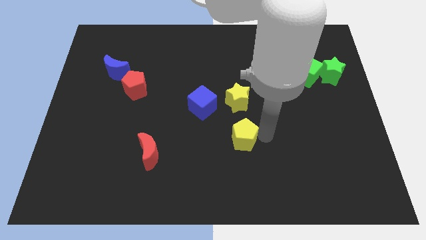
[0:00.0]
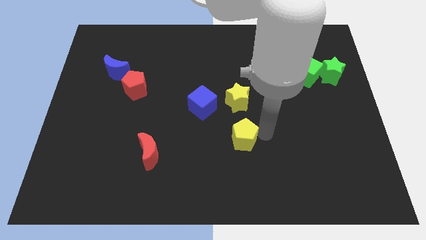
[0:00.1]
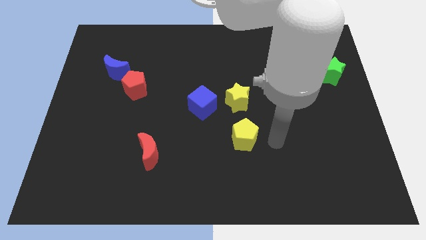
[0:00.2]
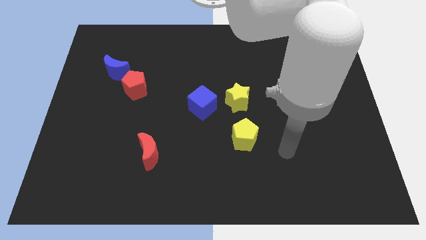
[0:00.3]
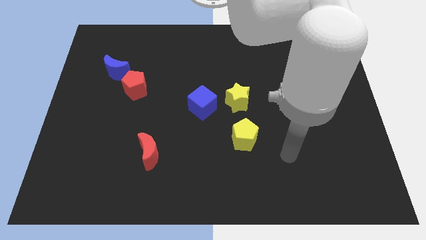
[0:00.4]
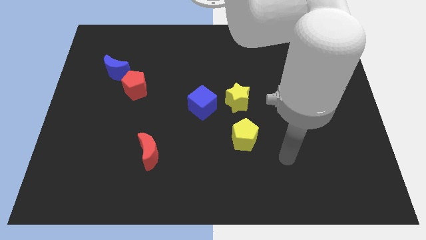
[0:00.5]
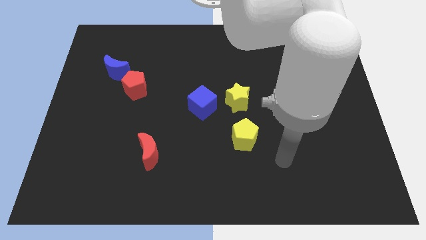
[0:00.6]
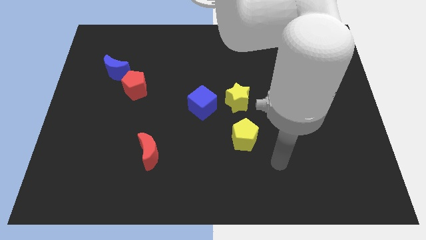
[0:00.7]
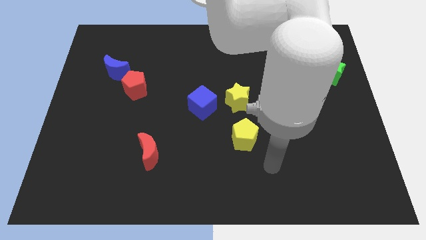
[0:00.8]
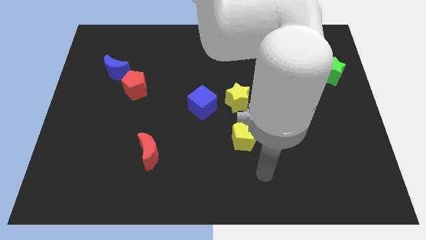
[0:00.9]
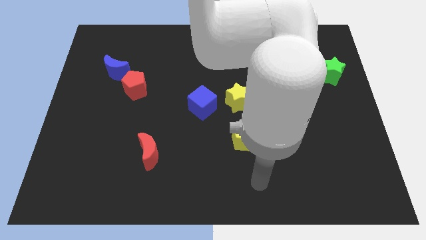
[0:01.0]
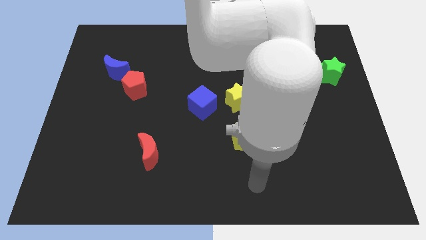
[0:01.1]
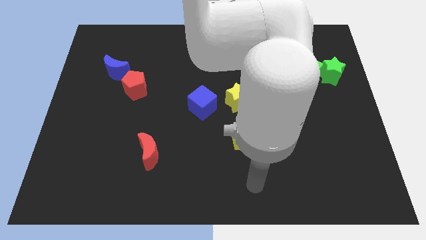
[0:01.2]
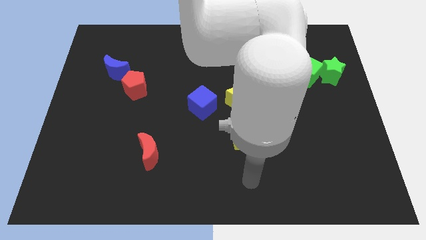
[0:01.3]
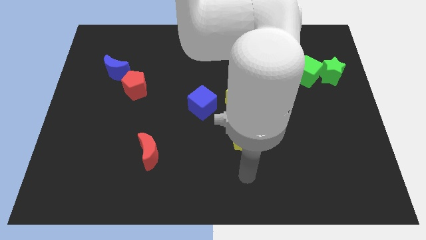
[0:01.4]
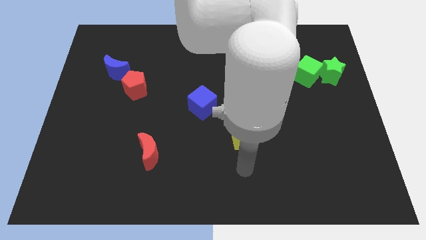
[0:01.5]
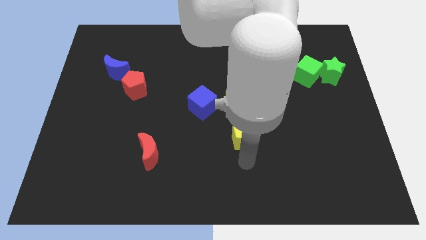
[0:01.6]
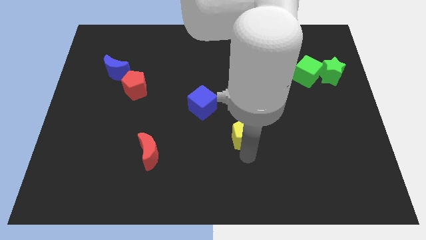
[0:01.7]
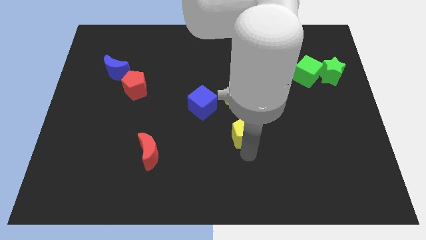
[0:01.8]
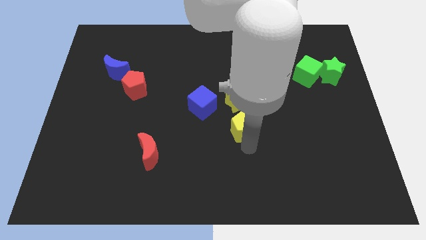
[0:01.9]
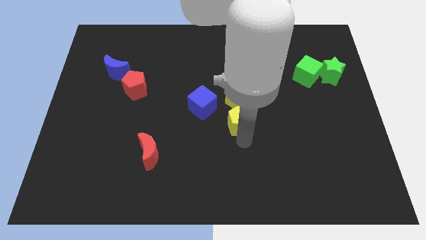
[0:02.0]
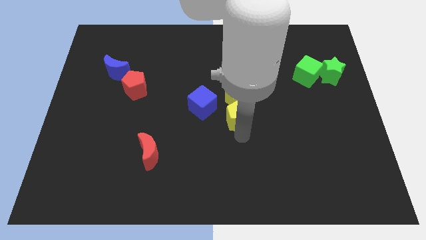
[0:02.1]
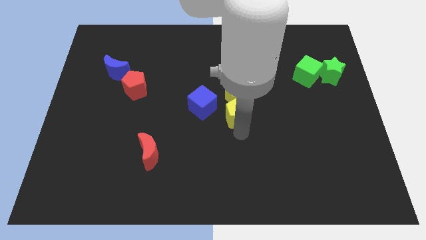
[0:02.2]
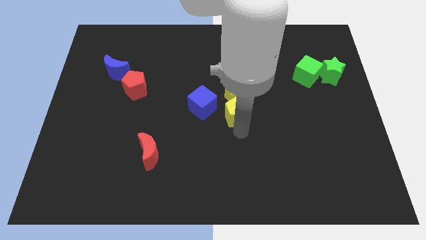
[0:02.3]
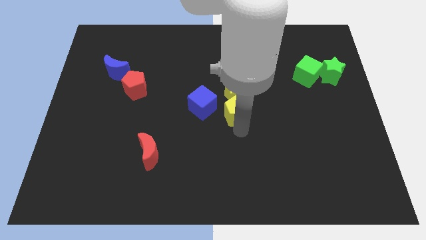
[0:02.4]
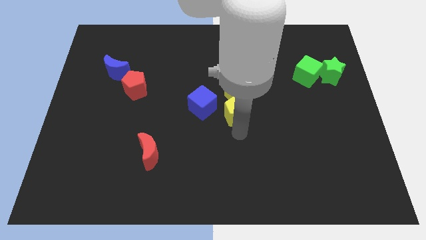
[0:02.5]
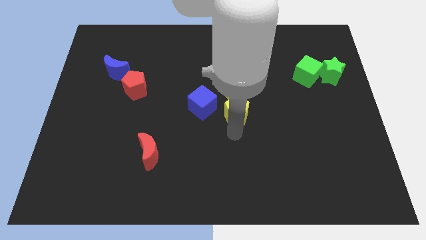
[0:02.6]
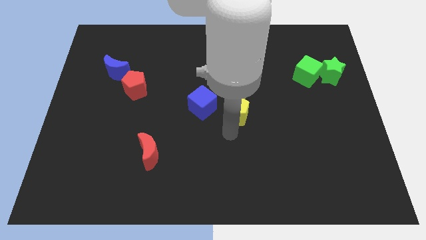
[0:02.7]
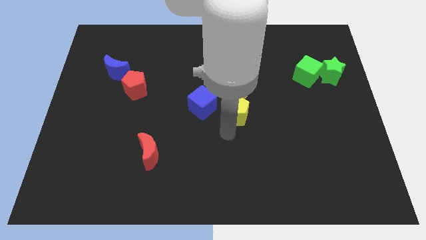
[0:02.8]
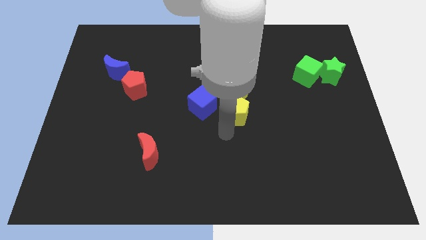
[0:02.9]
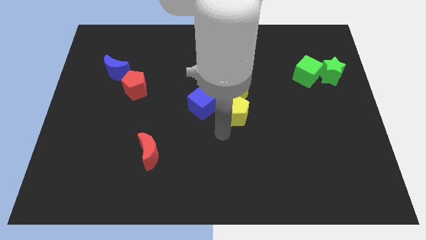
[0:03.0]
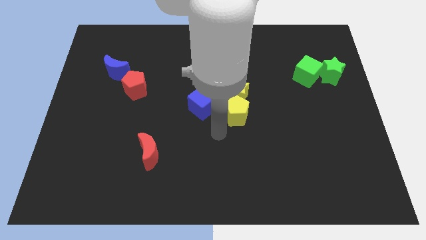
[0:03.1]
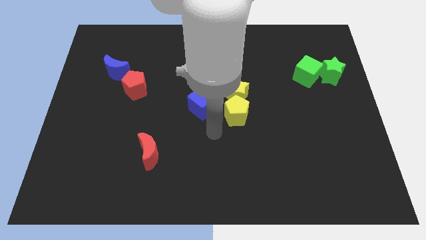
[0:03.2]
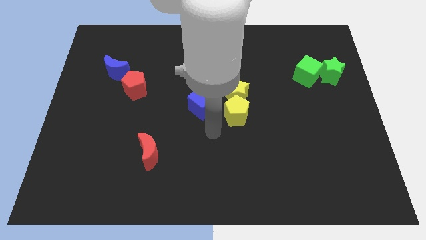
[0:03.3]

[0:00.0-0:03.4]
move the yellow pentagon to the bottom of the yellow star

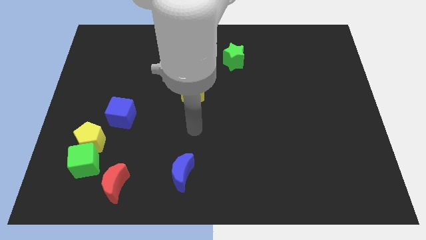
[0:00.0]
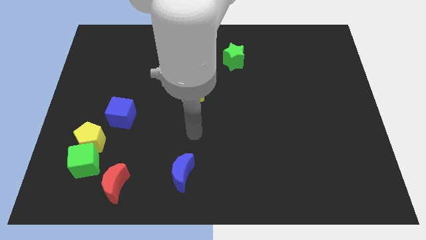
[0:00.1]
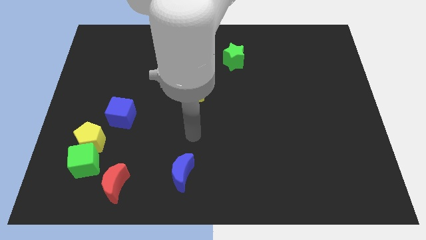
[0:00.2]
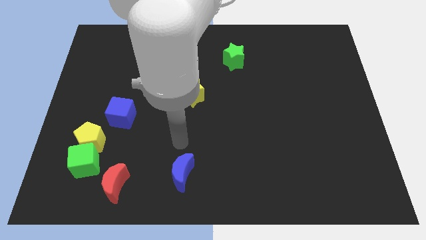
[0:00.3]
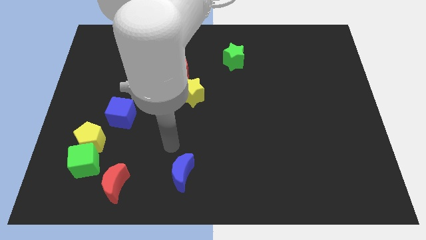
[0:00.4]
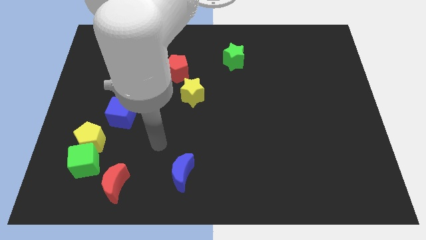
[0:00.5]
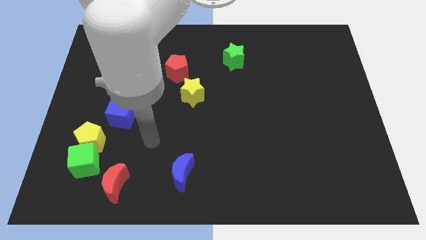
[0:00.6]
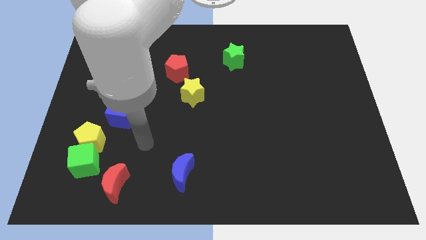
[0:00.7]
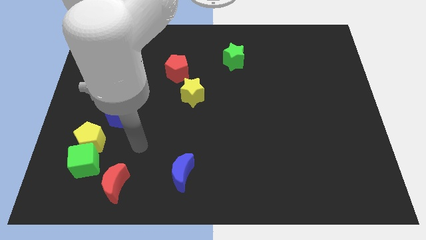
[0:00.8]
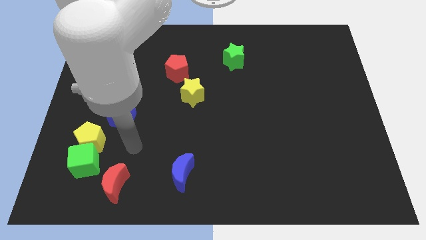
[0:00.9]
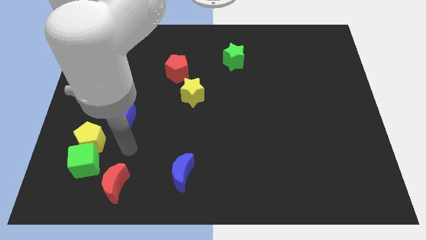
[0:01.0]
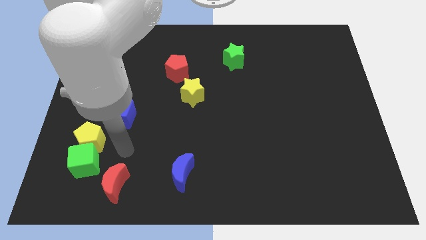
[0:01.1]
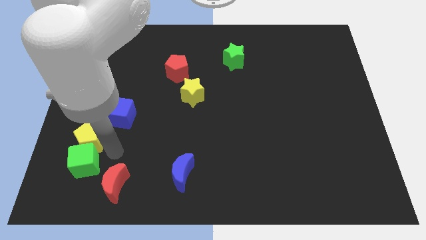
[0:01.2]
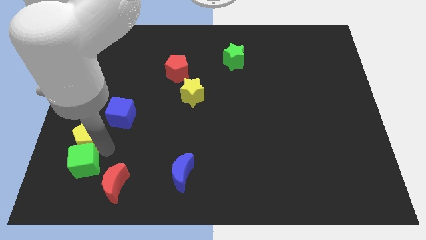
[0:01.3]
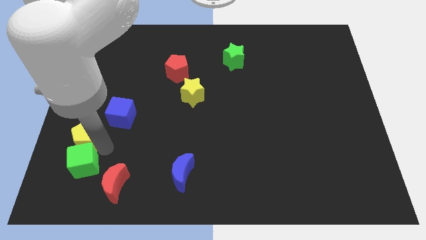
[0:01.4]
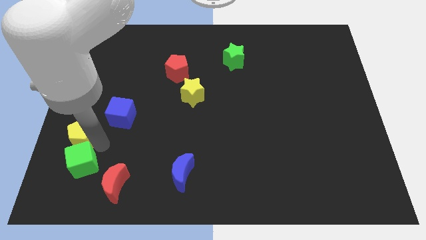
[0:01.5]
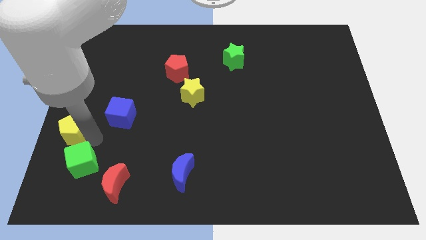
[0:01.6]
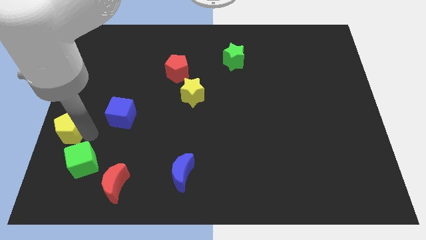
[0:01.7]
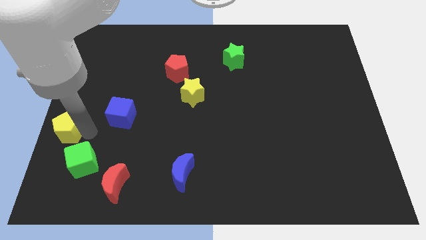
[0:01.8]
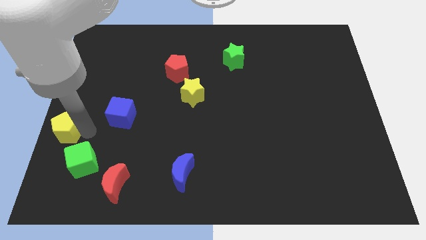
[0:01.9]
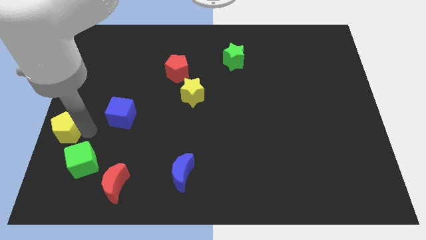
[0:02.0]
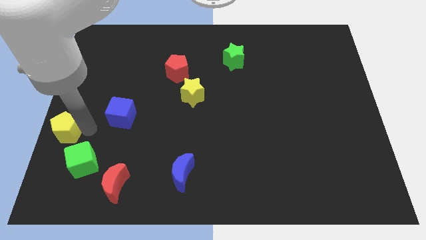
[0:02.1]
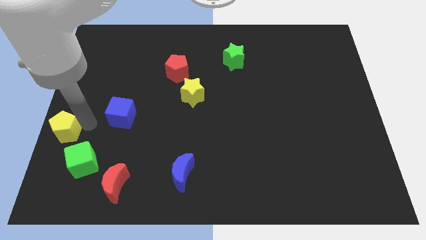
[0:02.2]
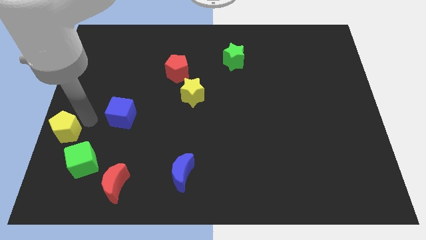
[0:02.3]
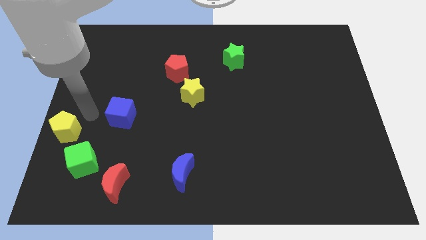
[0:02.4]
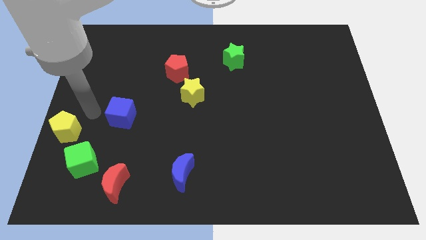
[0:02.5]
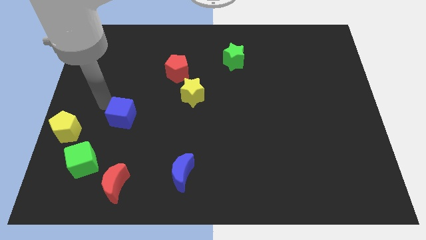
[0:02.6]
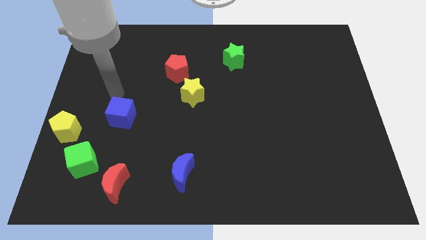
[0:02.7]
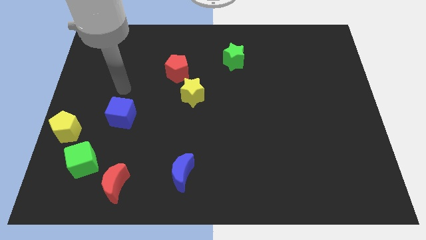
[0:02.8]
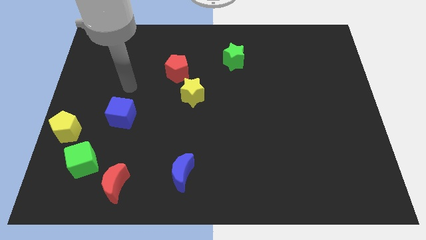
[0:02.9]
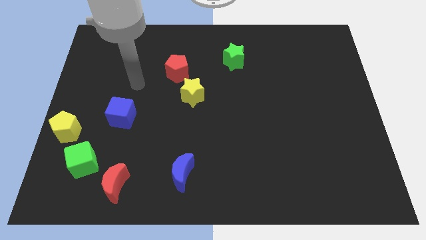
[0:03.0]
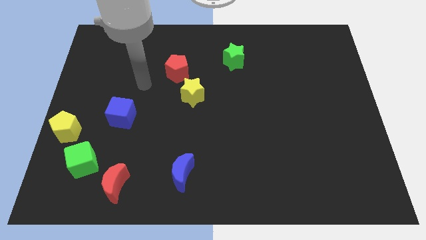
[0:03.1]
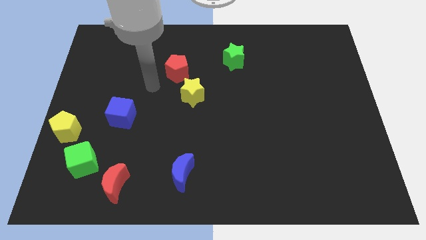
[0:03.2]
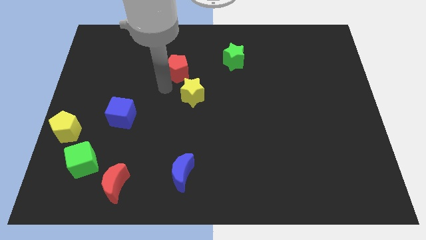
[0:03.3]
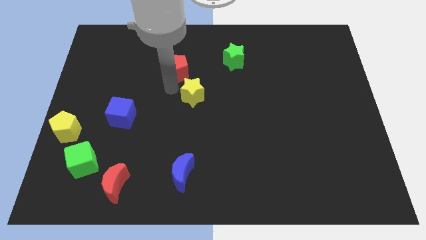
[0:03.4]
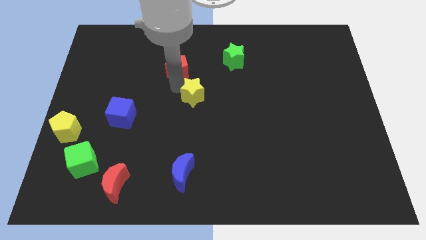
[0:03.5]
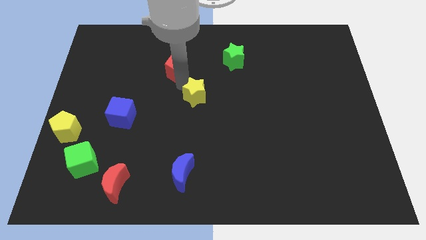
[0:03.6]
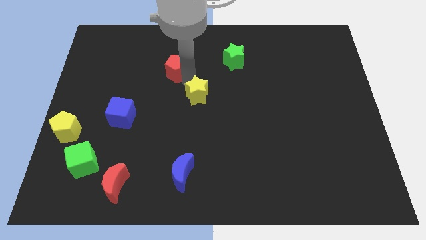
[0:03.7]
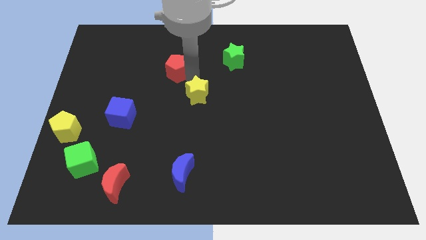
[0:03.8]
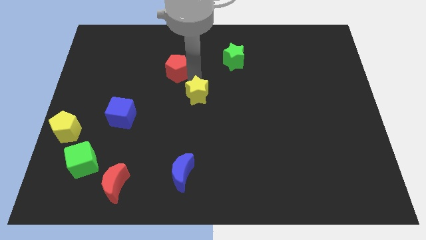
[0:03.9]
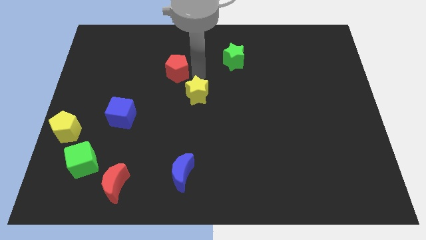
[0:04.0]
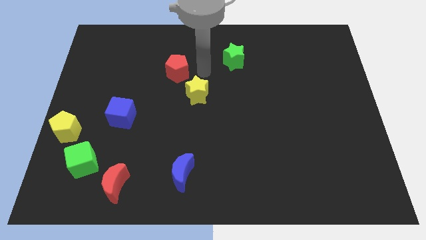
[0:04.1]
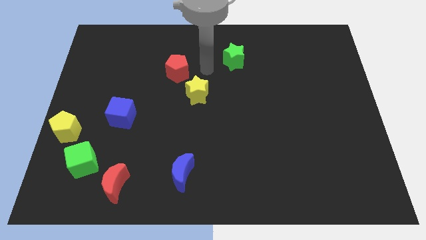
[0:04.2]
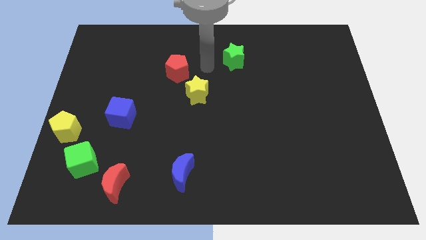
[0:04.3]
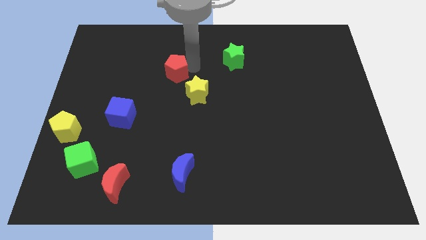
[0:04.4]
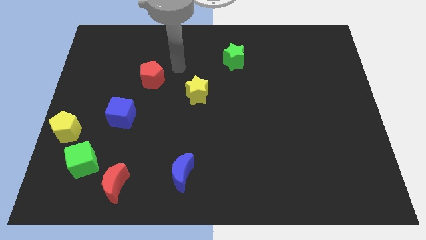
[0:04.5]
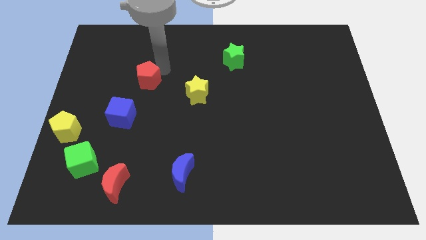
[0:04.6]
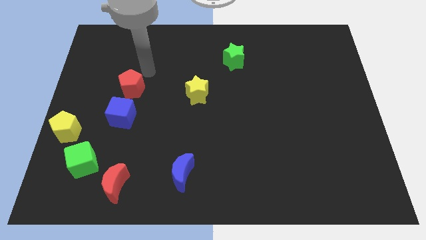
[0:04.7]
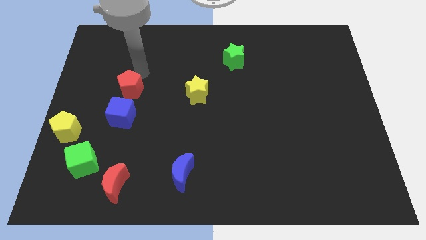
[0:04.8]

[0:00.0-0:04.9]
move the red pentagon above the blue cube

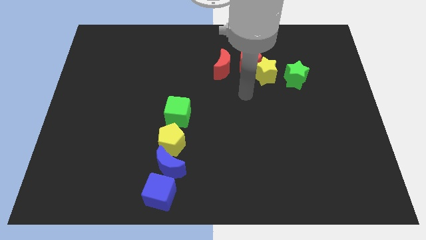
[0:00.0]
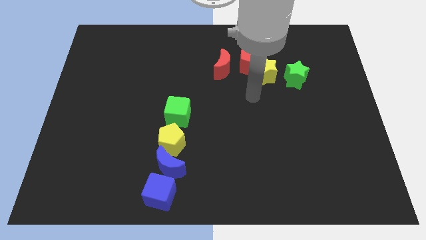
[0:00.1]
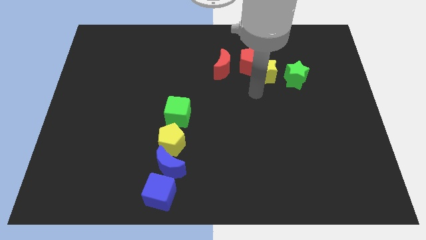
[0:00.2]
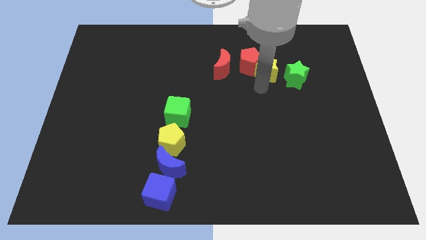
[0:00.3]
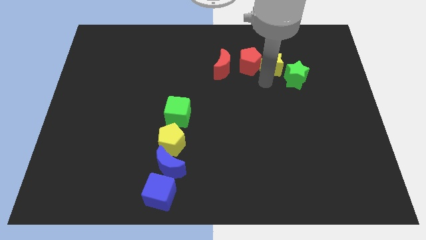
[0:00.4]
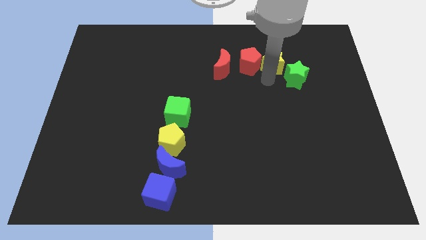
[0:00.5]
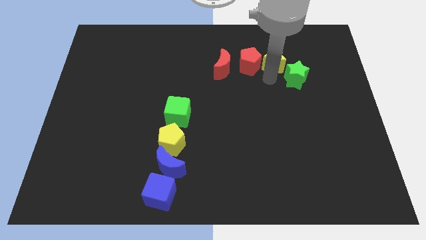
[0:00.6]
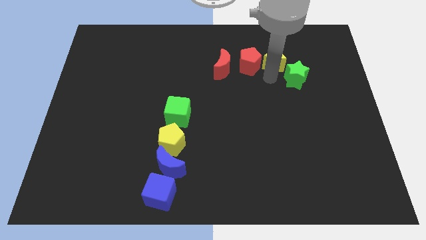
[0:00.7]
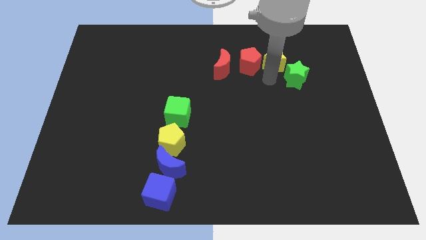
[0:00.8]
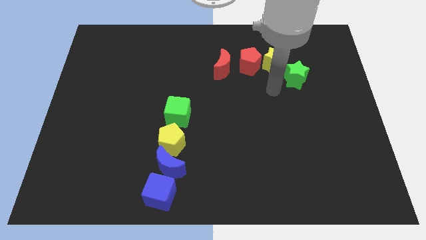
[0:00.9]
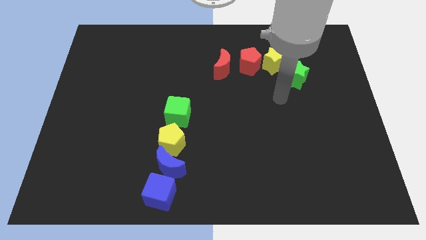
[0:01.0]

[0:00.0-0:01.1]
slightly push the yellow star right to the red pentagon
